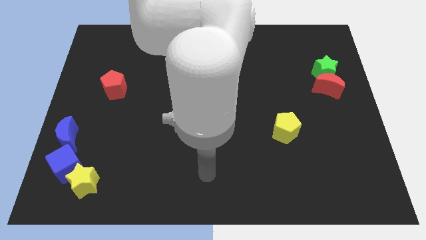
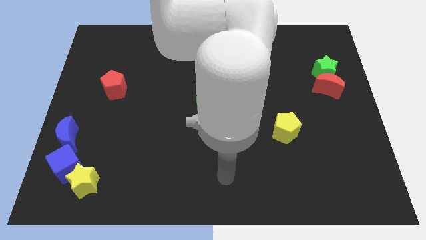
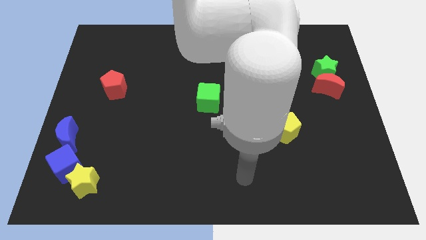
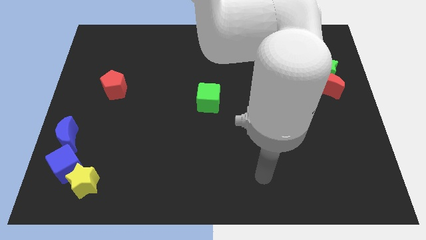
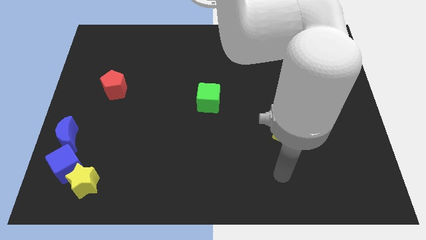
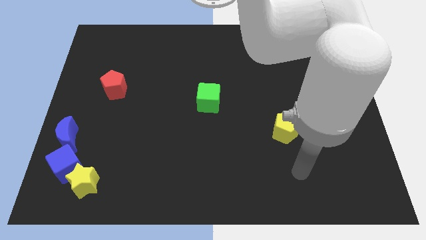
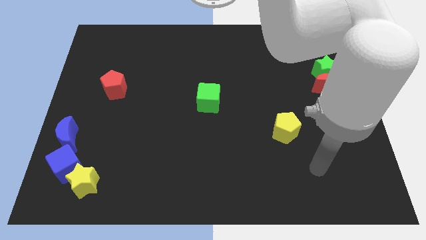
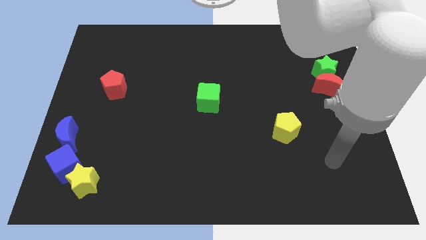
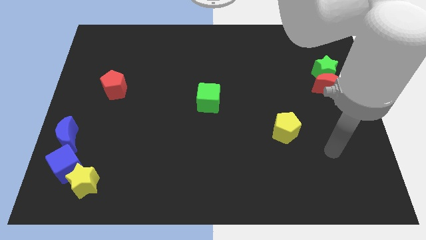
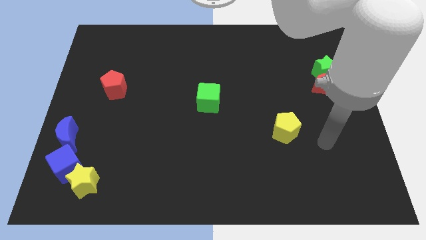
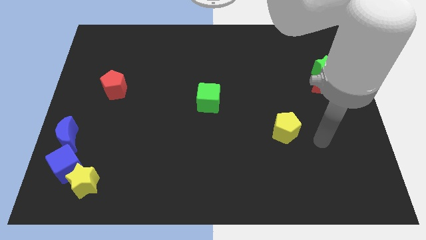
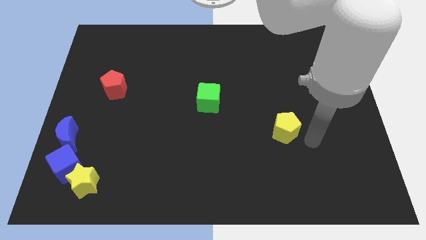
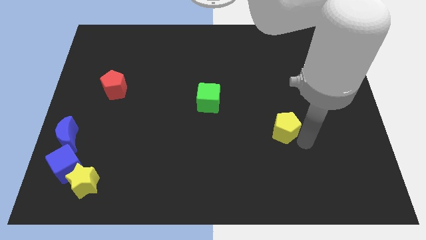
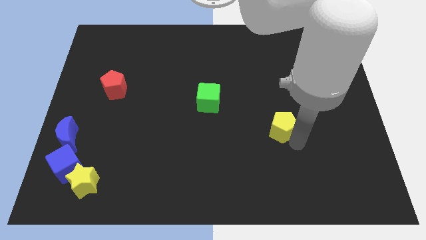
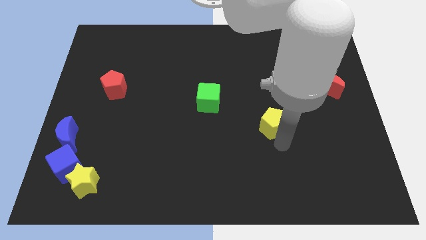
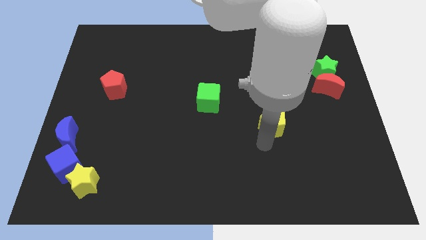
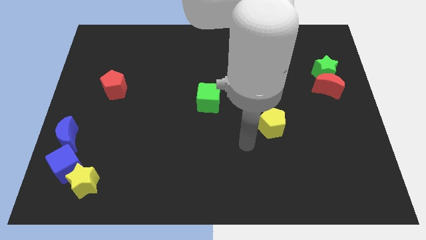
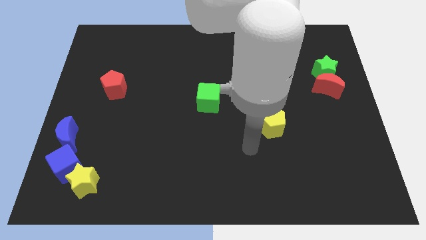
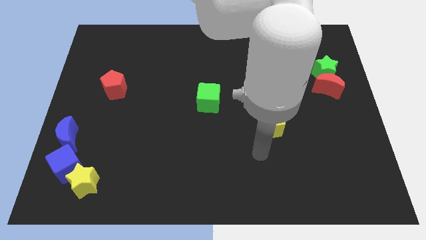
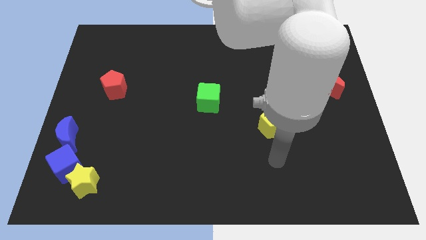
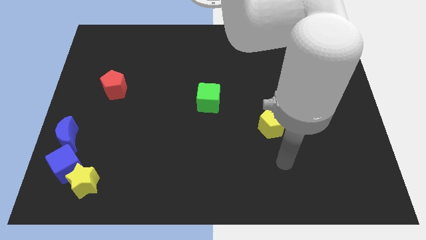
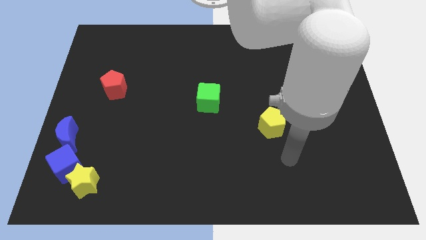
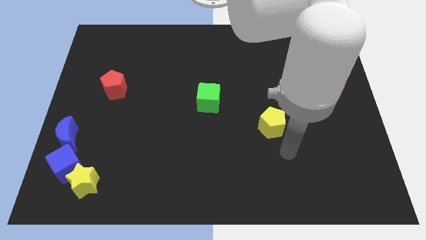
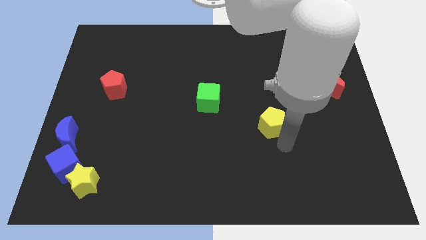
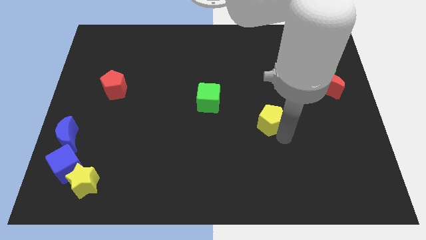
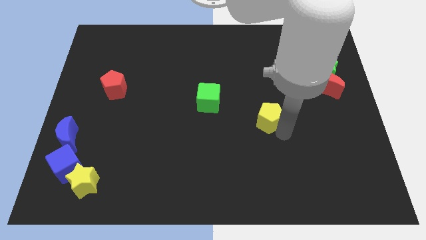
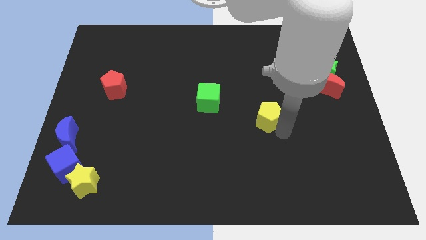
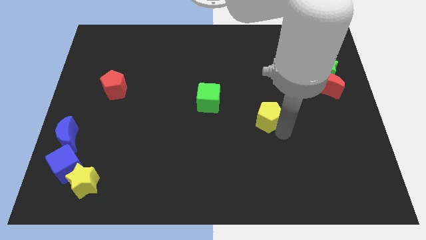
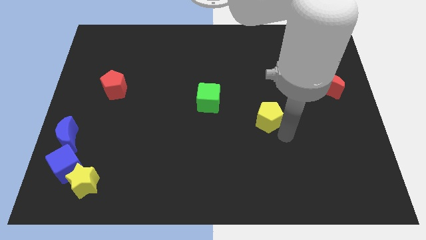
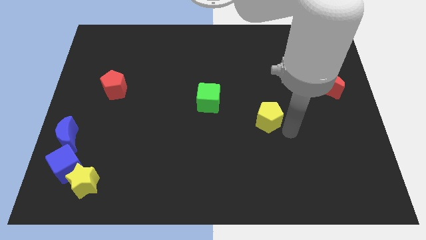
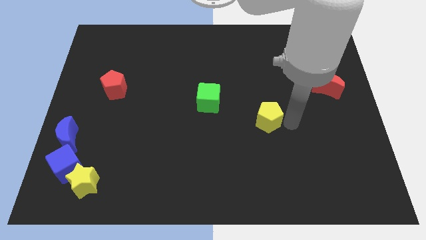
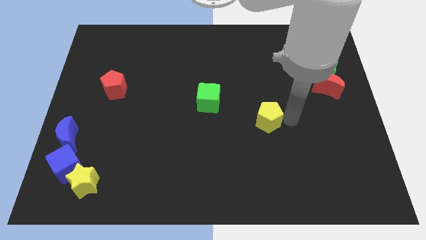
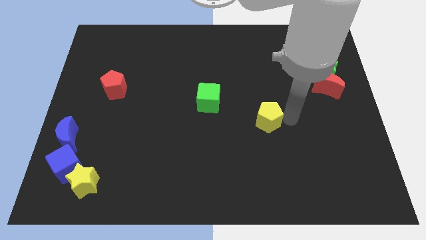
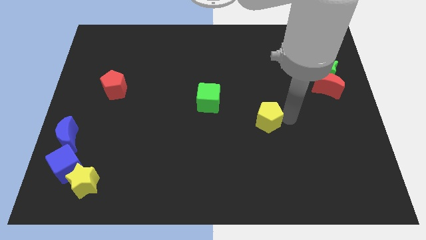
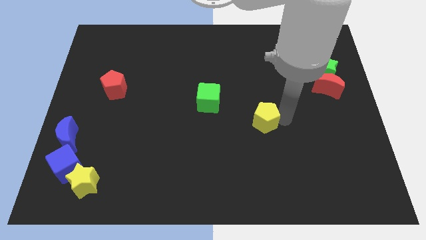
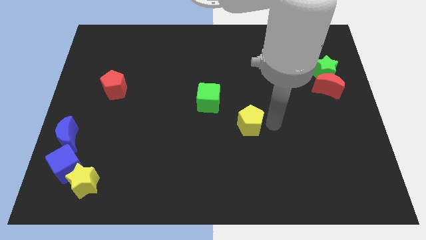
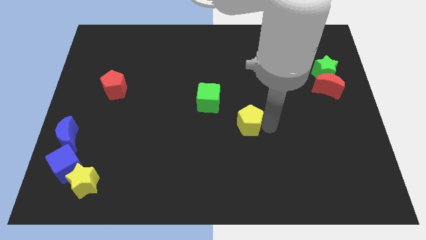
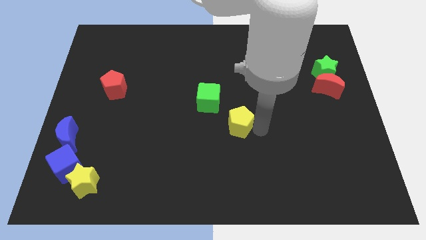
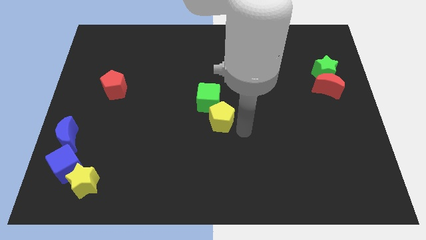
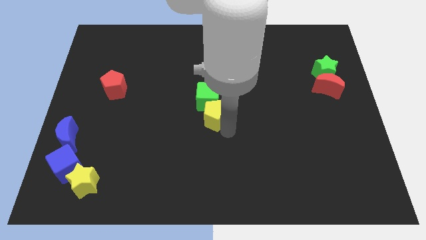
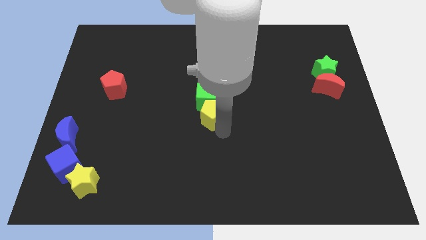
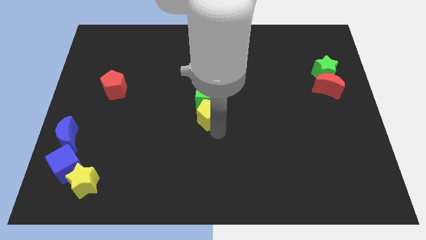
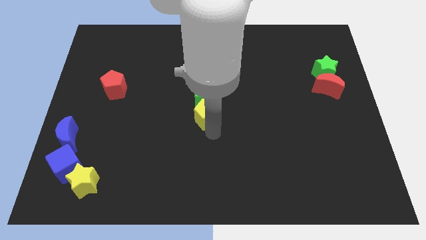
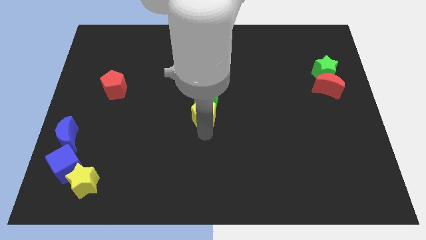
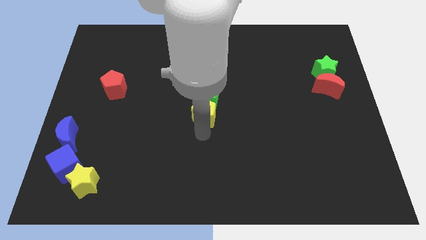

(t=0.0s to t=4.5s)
move the yellow pentagon below the greenn cube

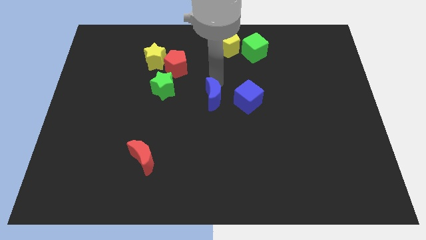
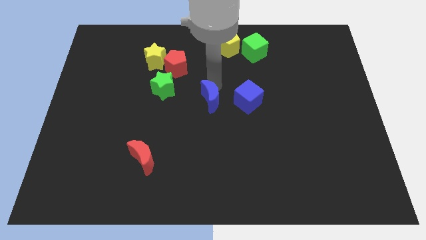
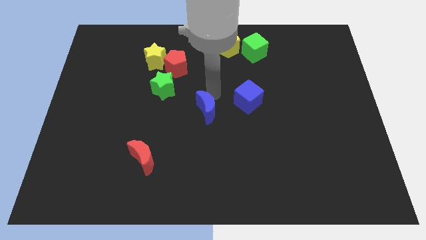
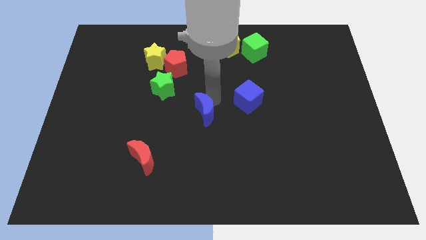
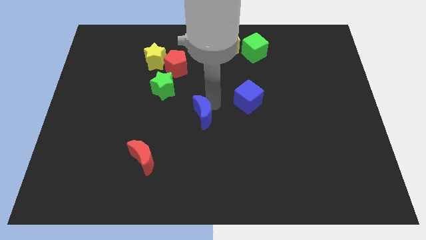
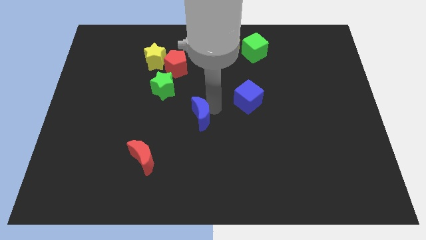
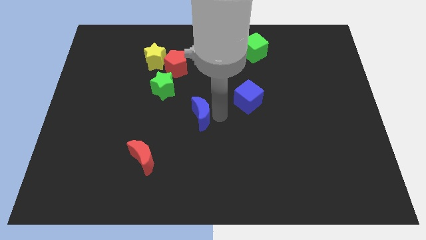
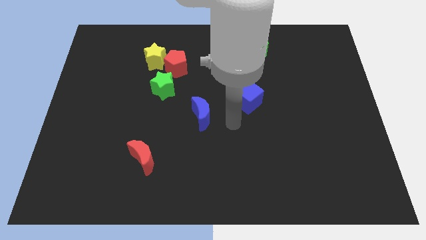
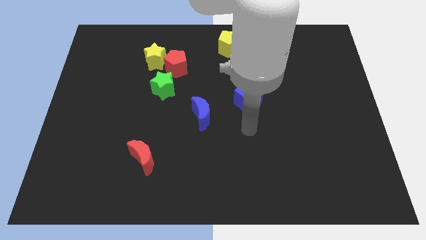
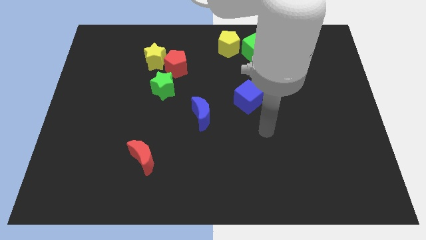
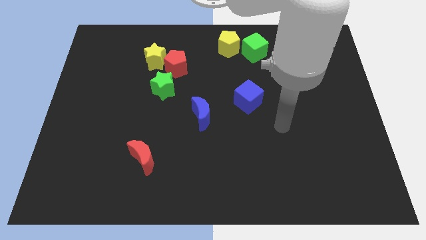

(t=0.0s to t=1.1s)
push blue crescent slightly downwards

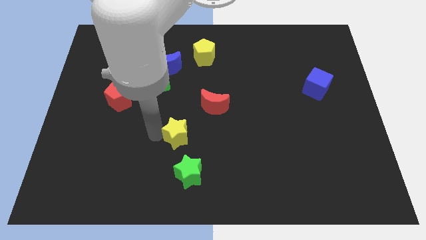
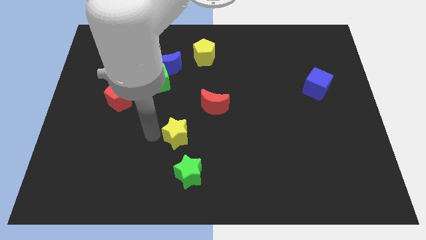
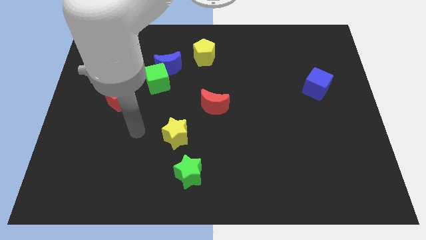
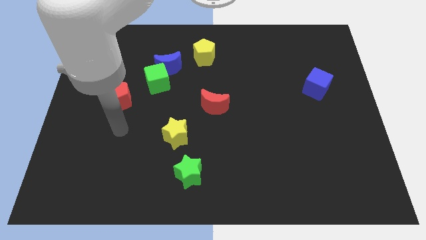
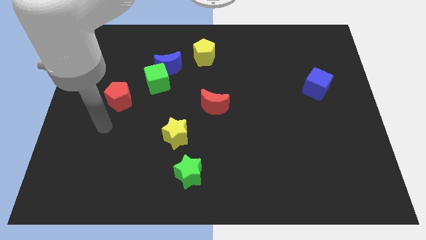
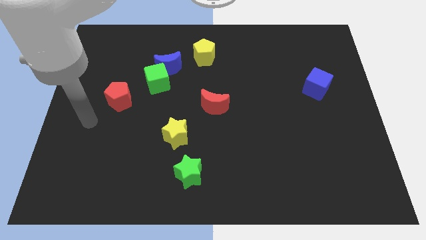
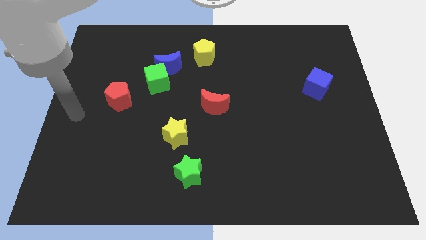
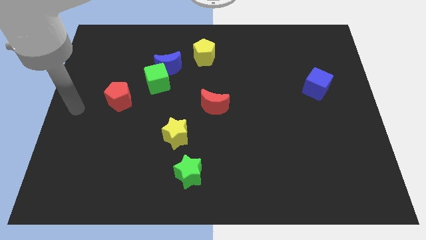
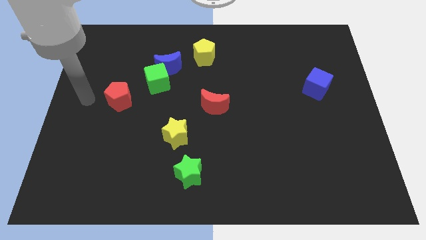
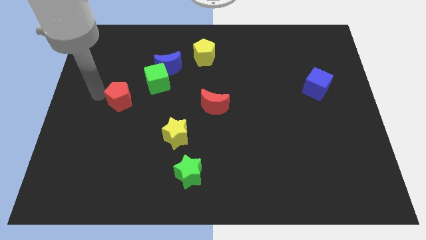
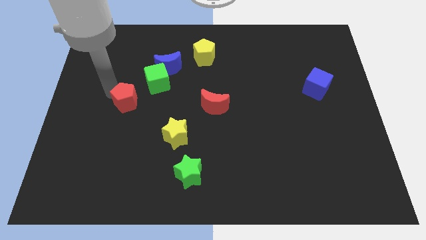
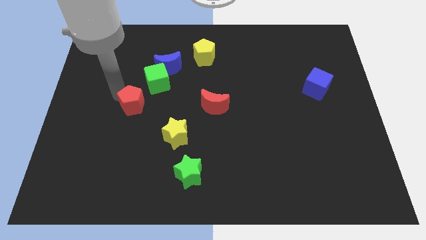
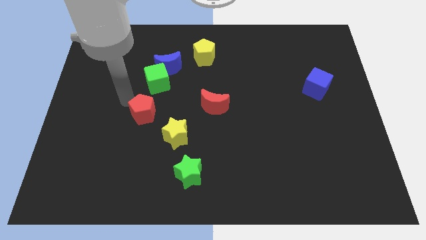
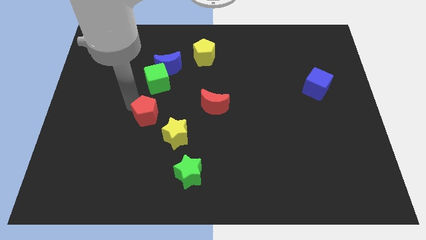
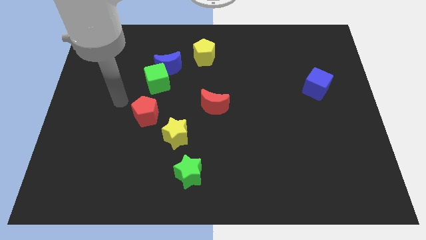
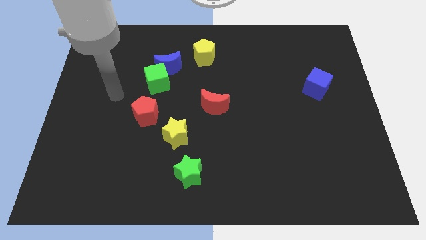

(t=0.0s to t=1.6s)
slightly move the red pentagon close to the yellow star

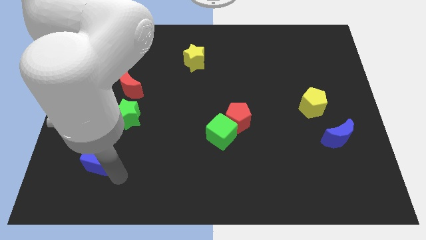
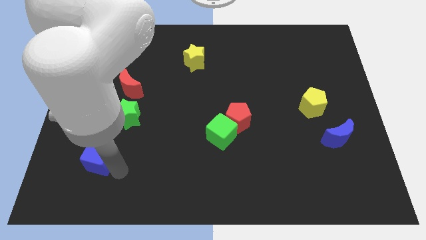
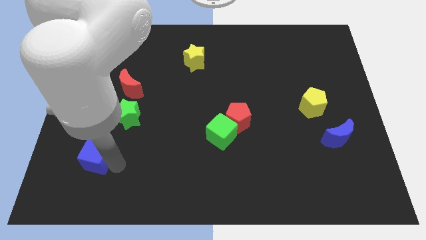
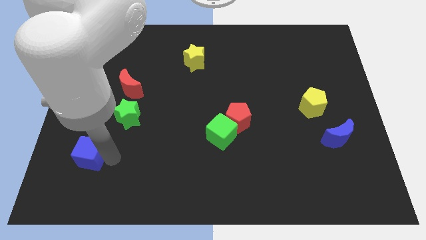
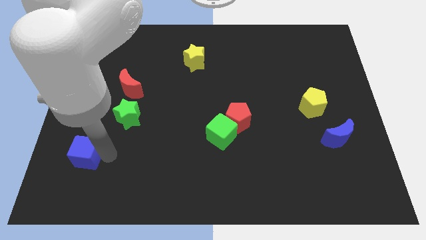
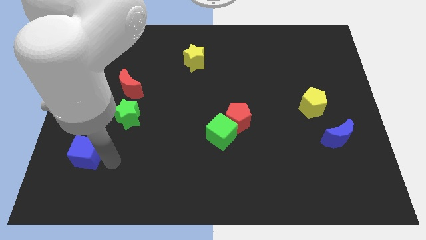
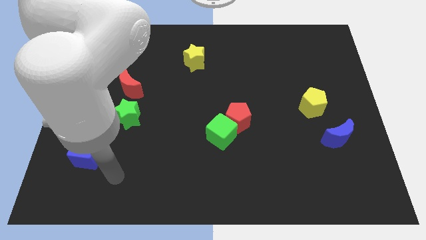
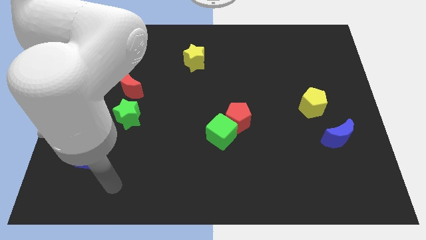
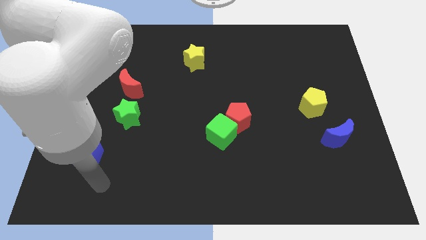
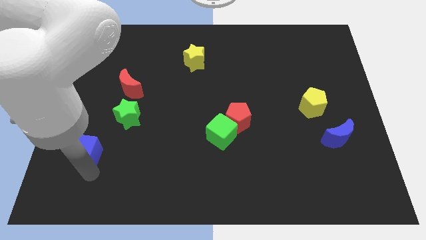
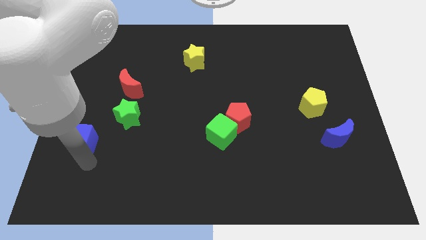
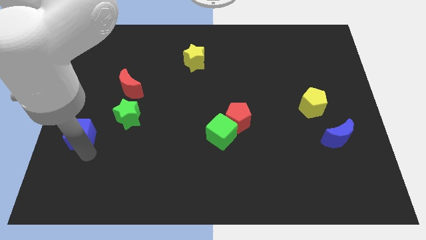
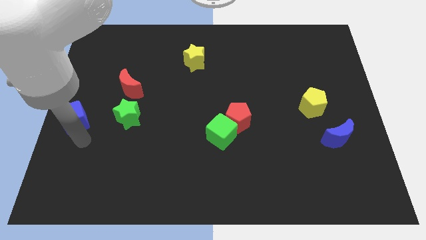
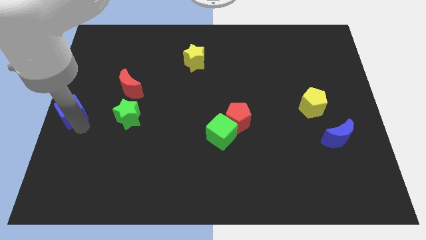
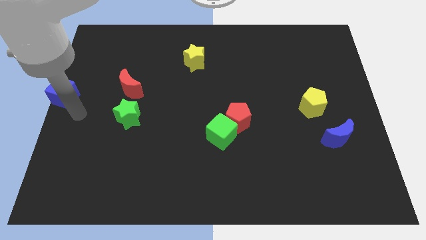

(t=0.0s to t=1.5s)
place the blue cube at the center left of the board

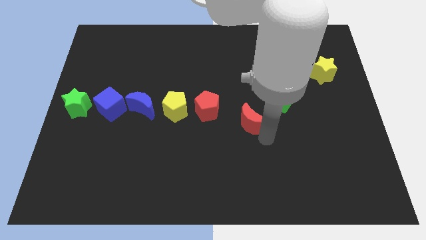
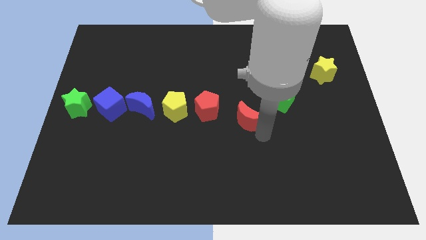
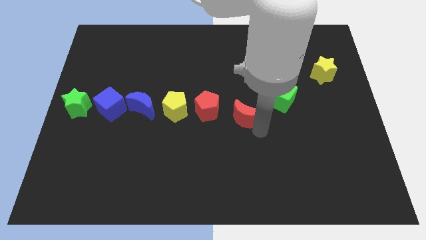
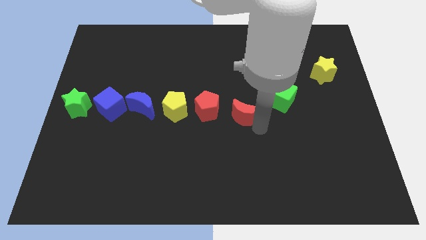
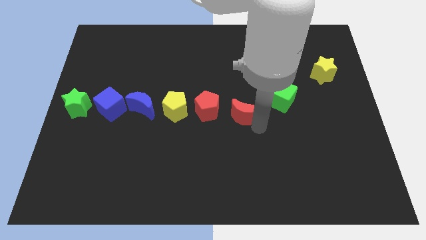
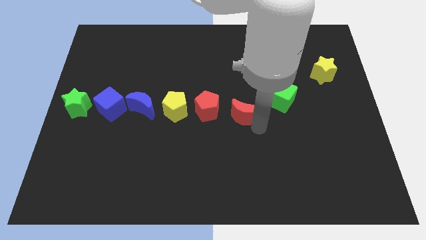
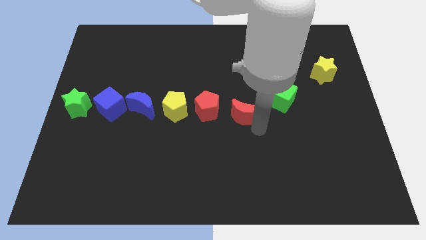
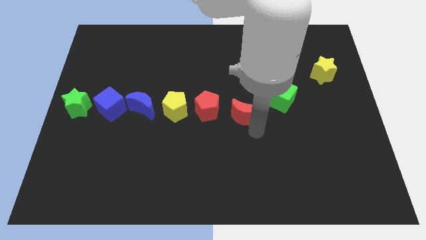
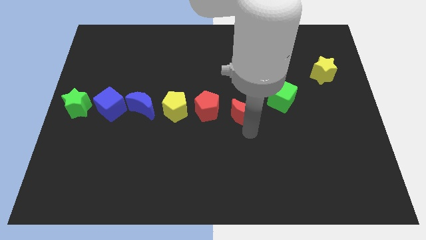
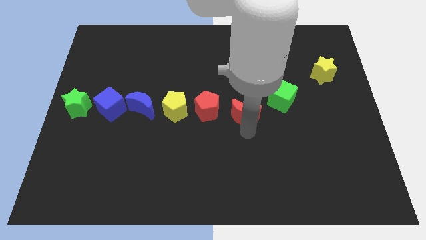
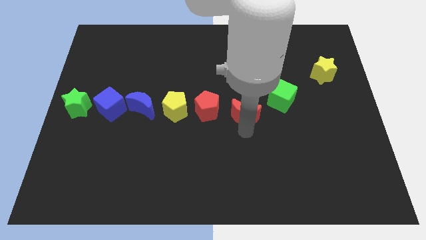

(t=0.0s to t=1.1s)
place the red crescent to the right side of the red pentagon
